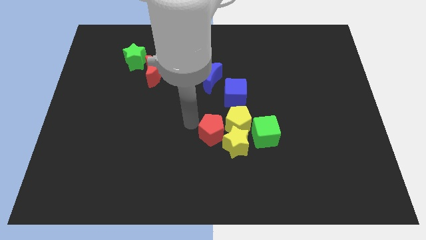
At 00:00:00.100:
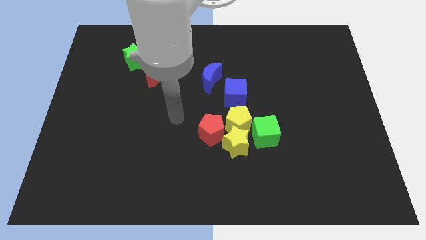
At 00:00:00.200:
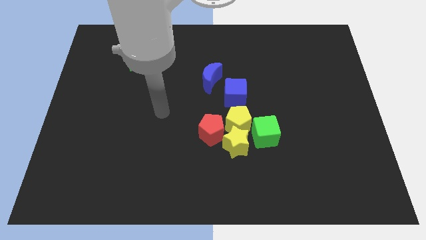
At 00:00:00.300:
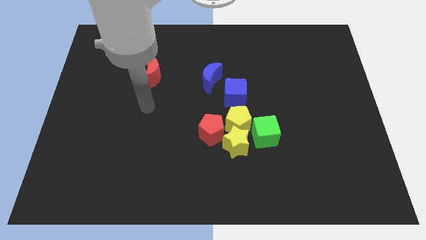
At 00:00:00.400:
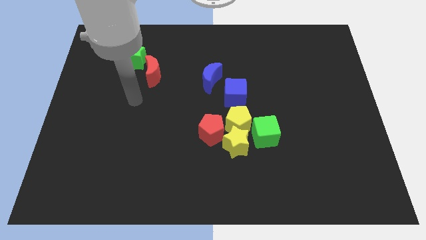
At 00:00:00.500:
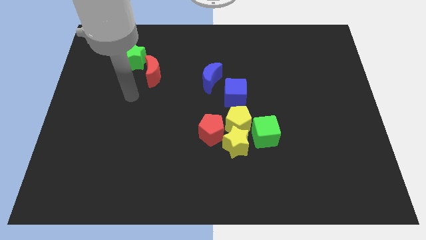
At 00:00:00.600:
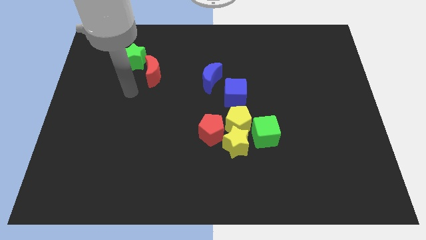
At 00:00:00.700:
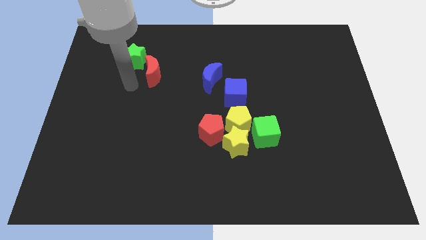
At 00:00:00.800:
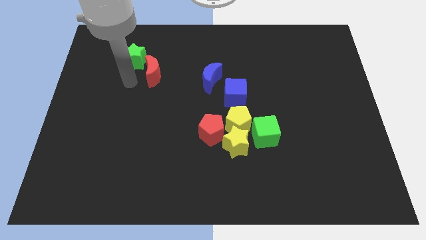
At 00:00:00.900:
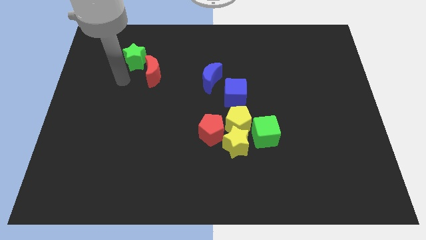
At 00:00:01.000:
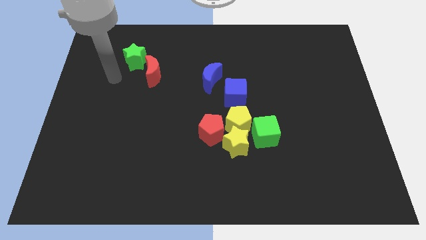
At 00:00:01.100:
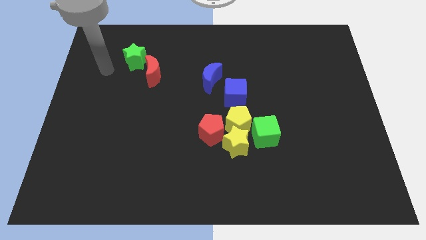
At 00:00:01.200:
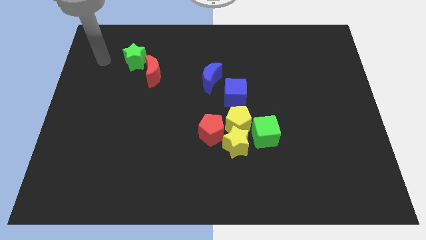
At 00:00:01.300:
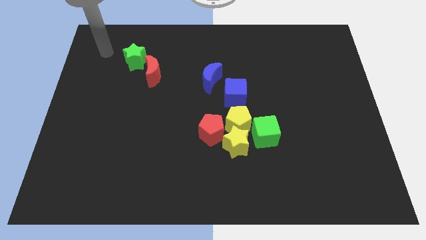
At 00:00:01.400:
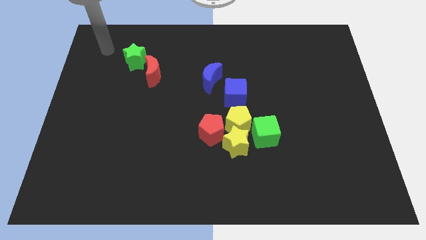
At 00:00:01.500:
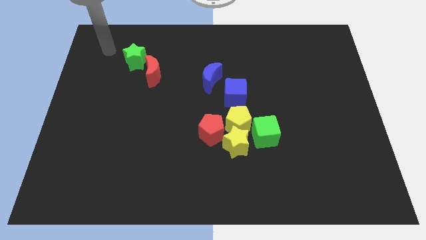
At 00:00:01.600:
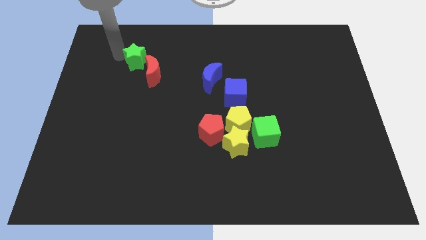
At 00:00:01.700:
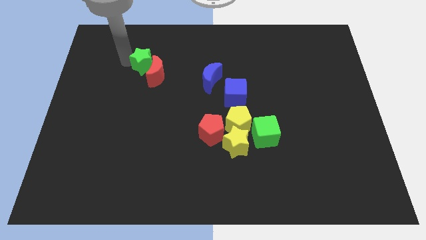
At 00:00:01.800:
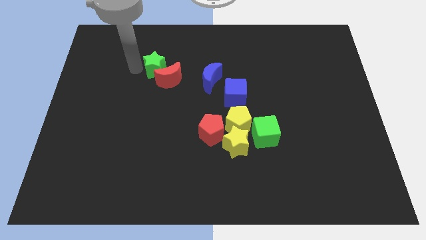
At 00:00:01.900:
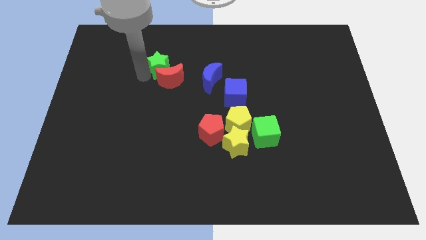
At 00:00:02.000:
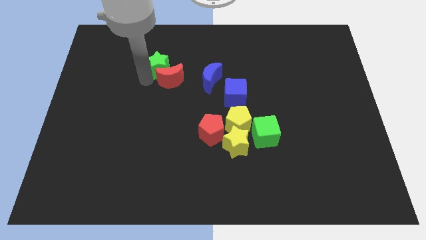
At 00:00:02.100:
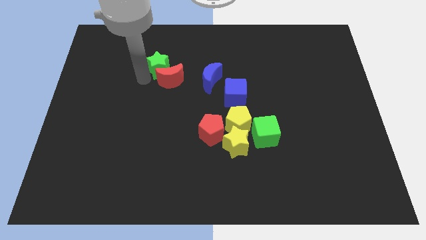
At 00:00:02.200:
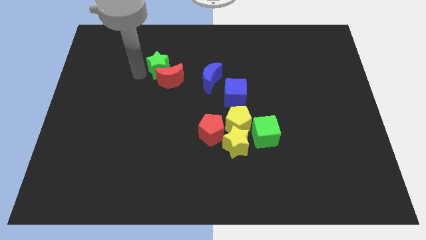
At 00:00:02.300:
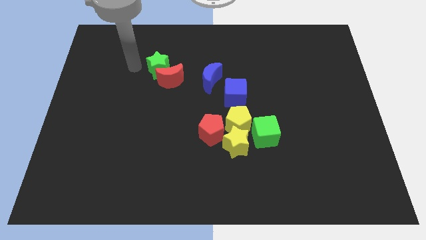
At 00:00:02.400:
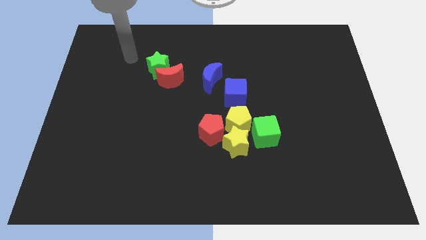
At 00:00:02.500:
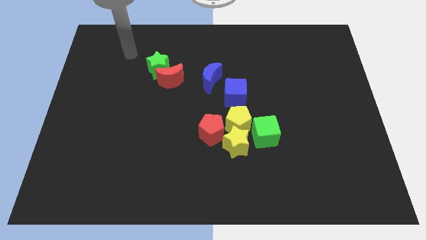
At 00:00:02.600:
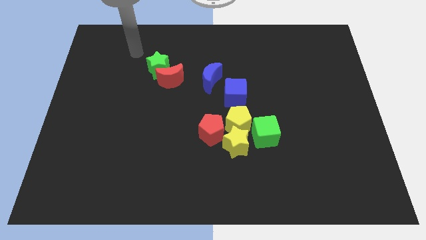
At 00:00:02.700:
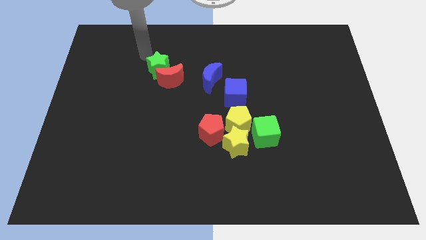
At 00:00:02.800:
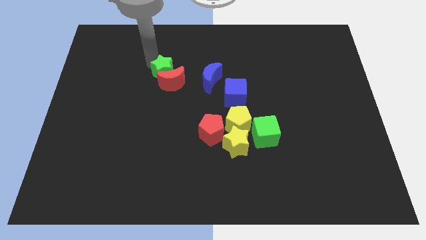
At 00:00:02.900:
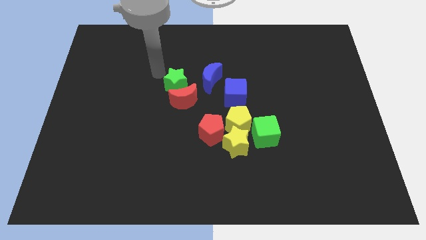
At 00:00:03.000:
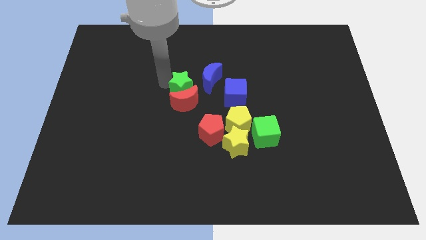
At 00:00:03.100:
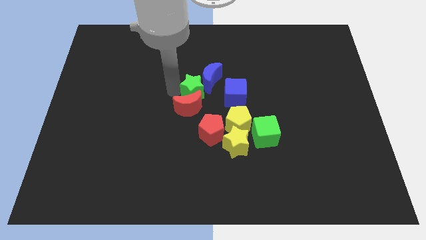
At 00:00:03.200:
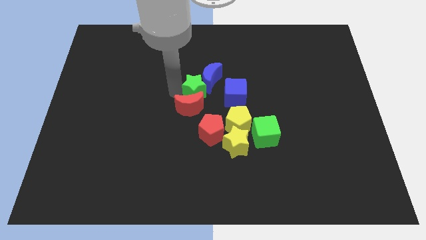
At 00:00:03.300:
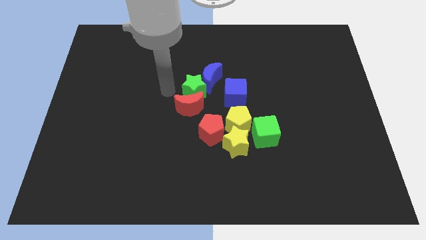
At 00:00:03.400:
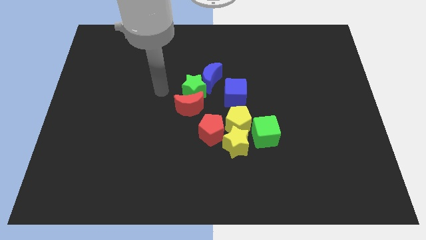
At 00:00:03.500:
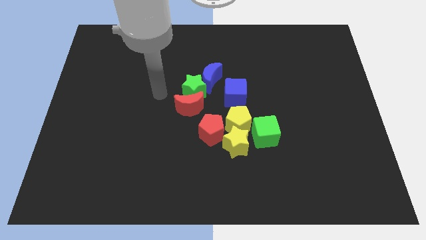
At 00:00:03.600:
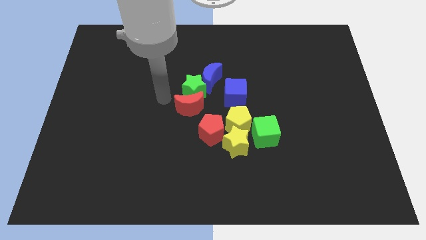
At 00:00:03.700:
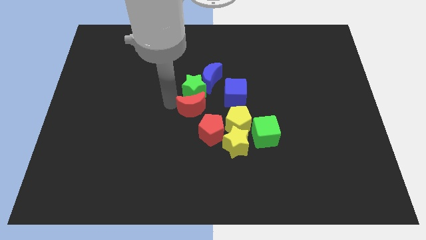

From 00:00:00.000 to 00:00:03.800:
push the green star and the red moon to the bottom of the blue moon

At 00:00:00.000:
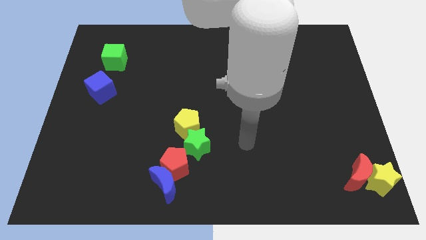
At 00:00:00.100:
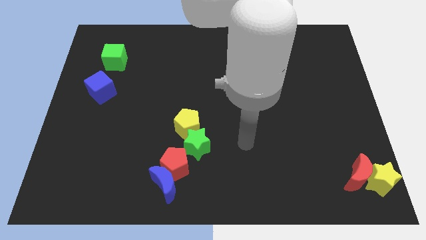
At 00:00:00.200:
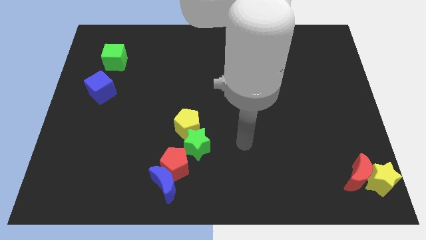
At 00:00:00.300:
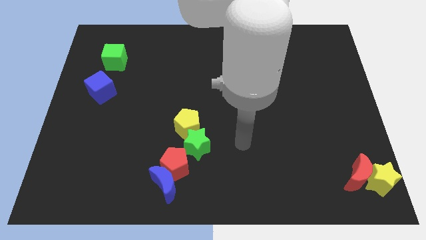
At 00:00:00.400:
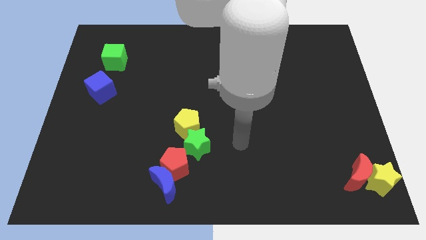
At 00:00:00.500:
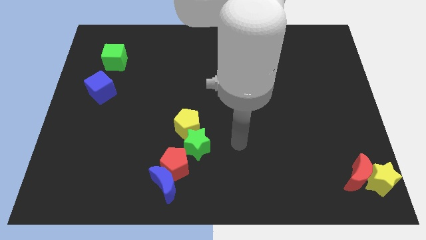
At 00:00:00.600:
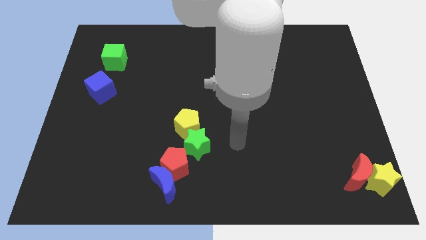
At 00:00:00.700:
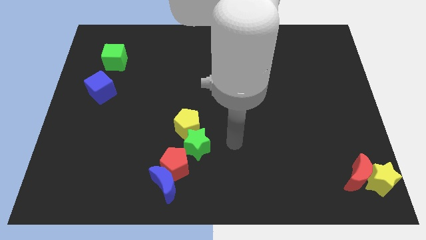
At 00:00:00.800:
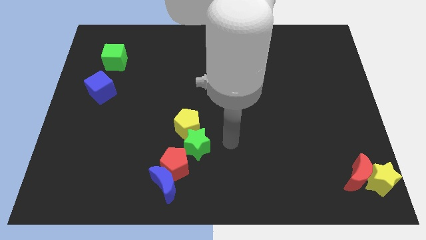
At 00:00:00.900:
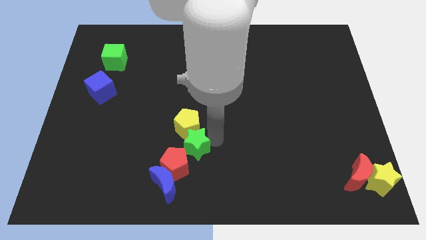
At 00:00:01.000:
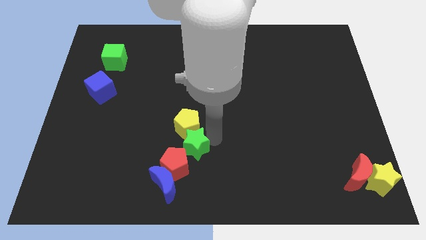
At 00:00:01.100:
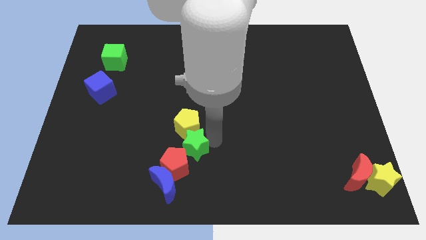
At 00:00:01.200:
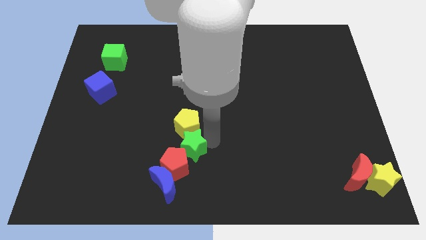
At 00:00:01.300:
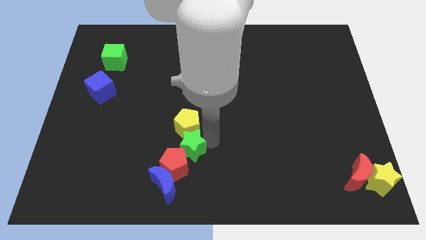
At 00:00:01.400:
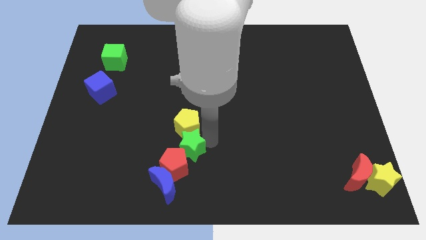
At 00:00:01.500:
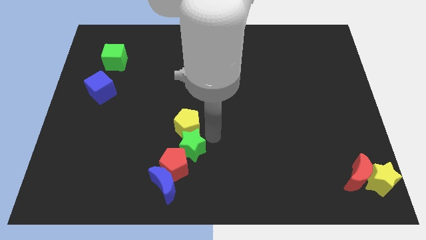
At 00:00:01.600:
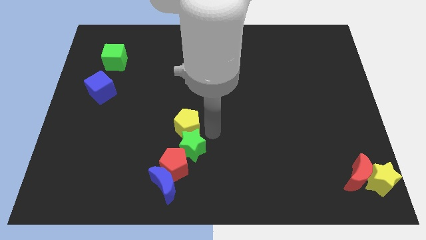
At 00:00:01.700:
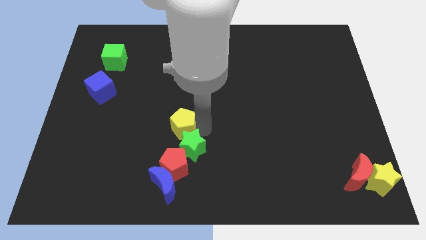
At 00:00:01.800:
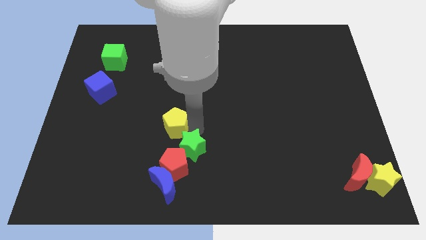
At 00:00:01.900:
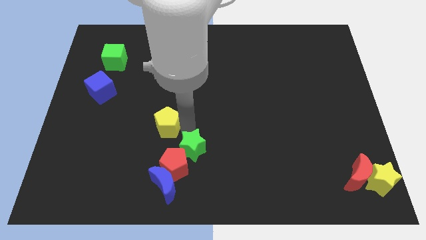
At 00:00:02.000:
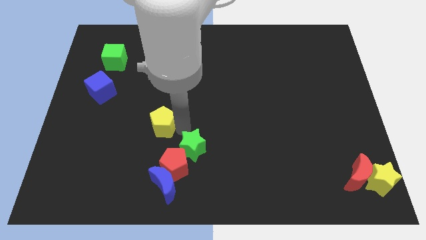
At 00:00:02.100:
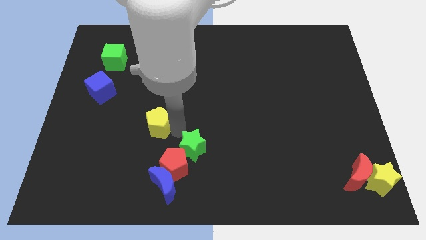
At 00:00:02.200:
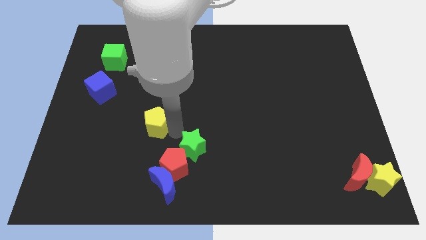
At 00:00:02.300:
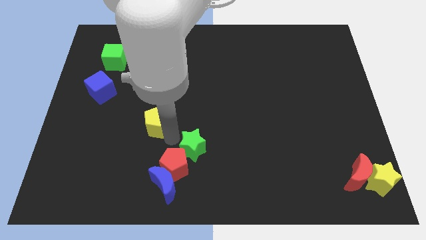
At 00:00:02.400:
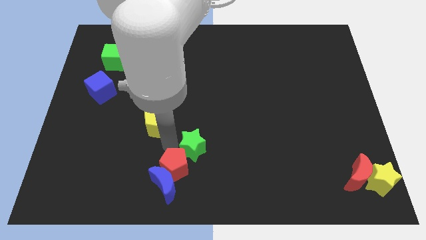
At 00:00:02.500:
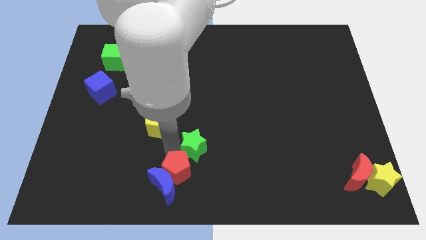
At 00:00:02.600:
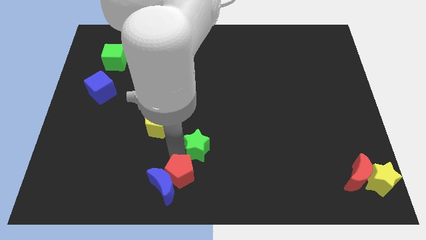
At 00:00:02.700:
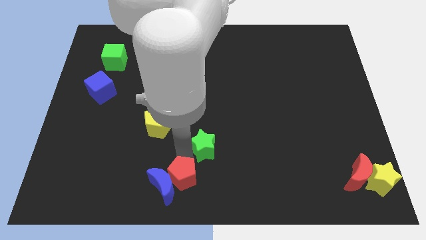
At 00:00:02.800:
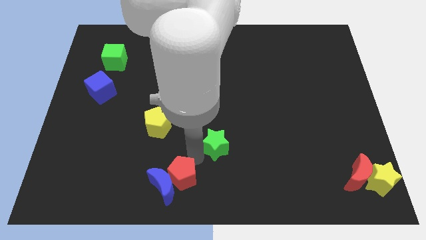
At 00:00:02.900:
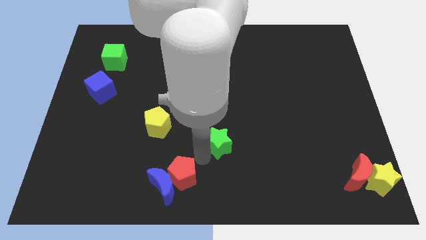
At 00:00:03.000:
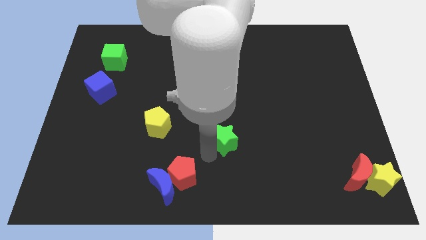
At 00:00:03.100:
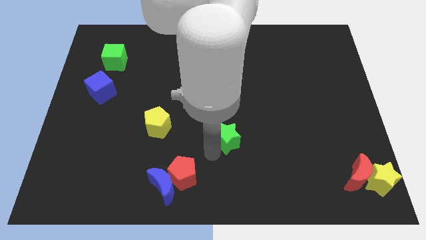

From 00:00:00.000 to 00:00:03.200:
separate green star and yellow pentagon

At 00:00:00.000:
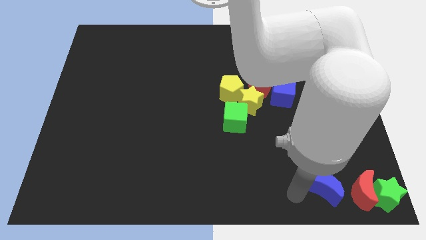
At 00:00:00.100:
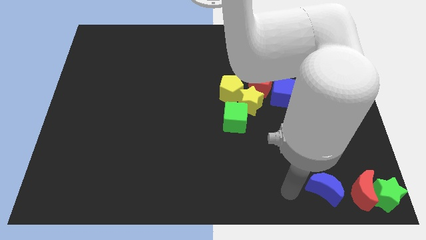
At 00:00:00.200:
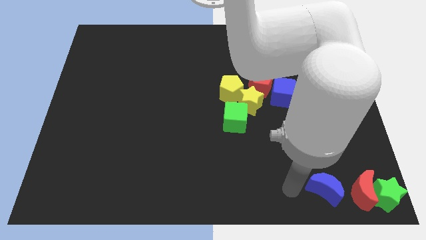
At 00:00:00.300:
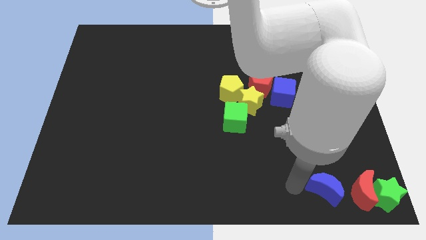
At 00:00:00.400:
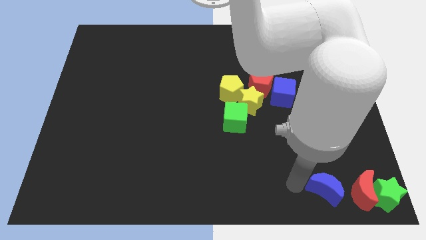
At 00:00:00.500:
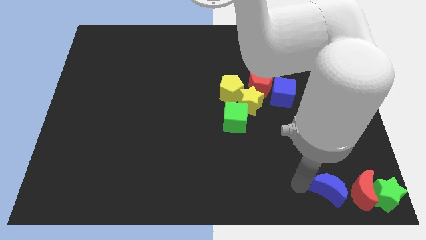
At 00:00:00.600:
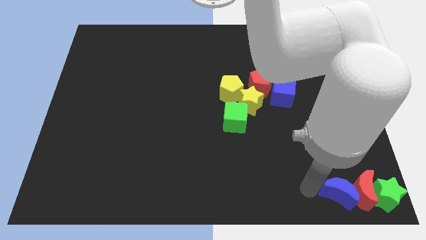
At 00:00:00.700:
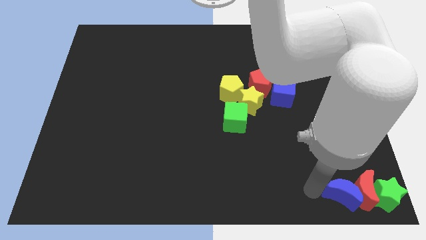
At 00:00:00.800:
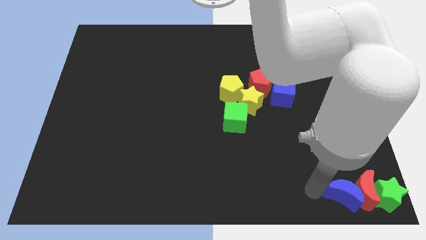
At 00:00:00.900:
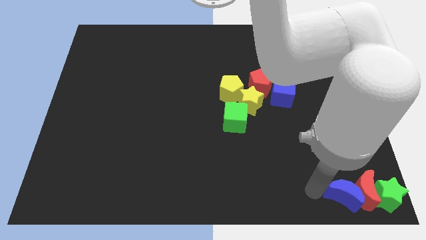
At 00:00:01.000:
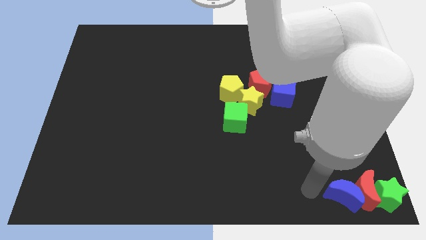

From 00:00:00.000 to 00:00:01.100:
push blue cube in to red moon

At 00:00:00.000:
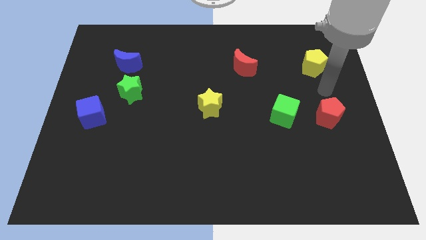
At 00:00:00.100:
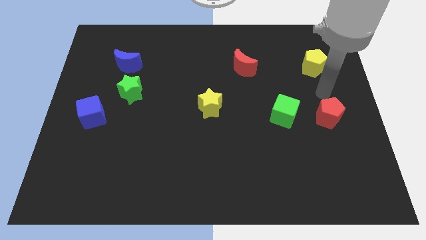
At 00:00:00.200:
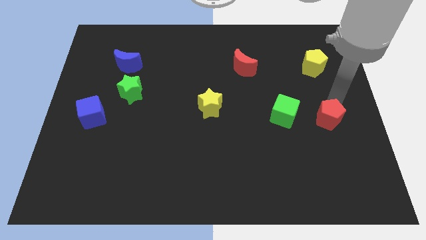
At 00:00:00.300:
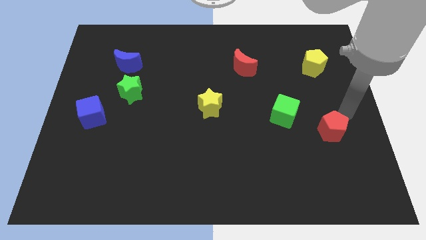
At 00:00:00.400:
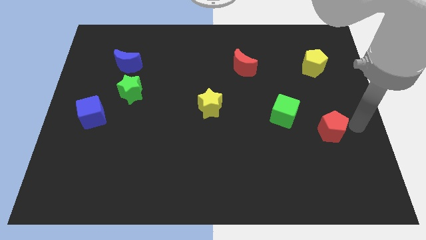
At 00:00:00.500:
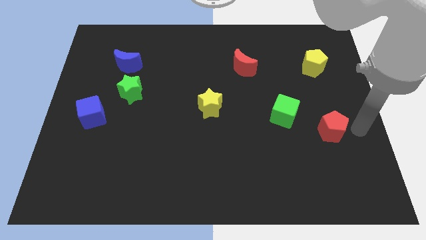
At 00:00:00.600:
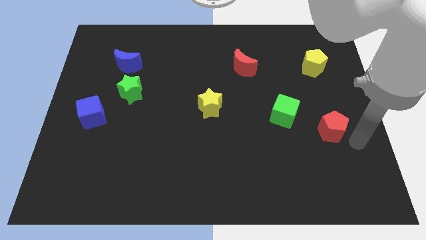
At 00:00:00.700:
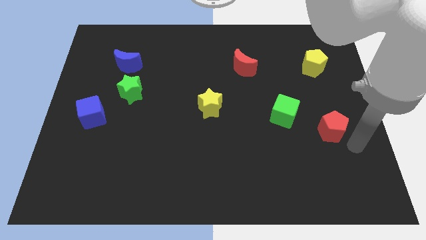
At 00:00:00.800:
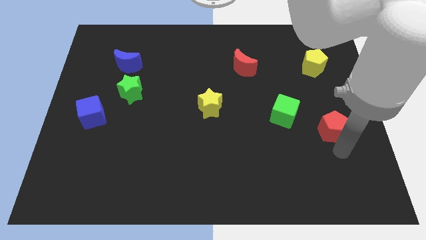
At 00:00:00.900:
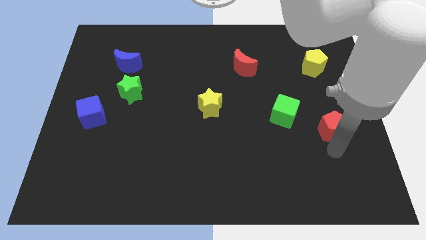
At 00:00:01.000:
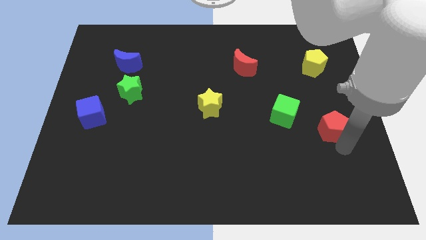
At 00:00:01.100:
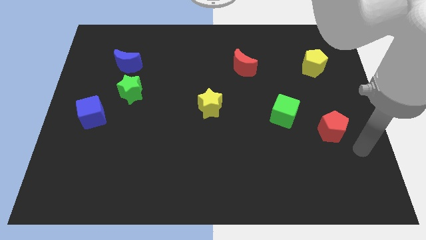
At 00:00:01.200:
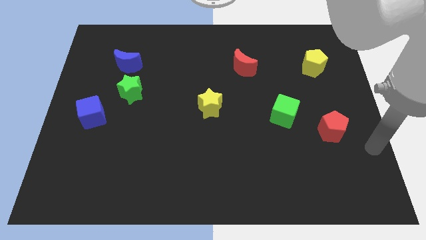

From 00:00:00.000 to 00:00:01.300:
slightly push the red pentagon
